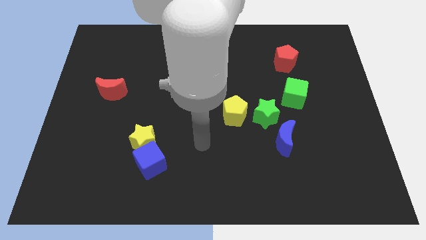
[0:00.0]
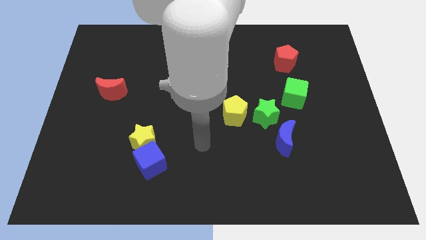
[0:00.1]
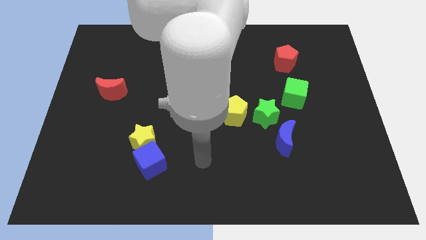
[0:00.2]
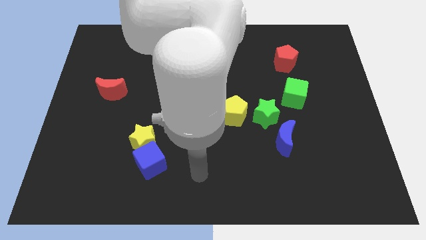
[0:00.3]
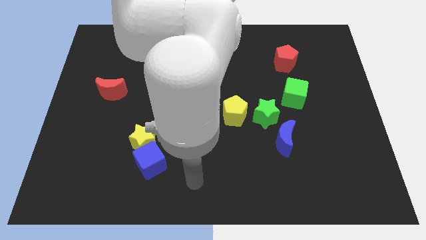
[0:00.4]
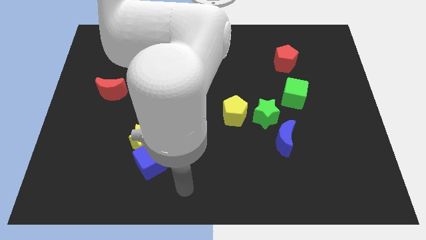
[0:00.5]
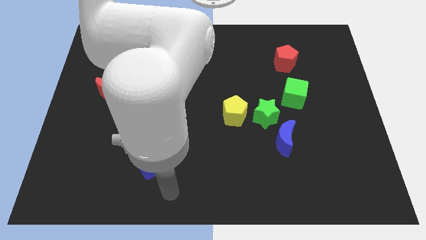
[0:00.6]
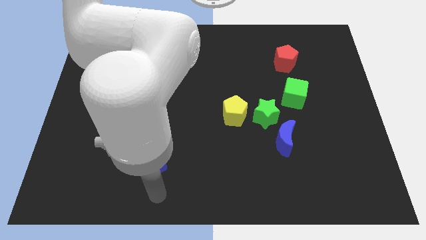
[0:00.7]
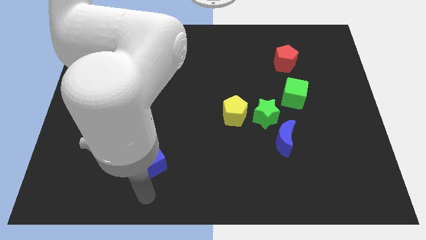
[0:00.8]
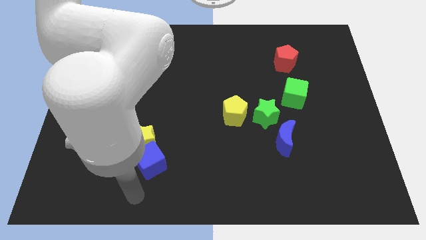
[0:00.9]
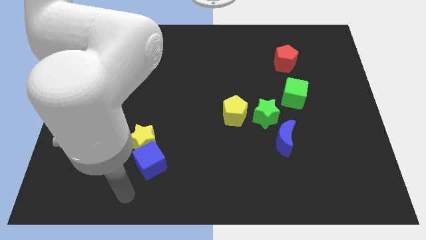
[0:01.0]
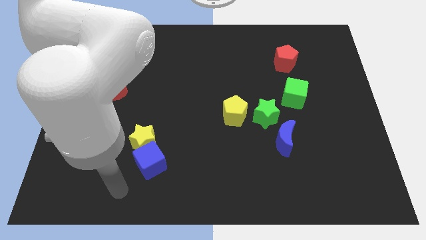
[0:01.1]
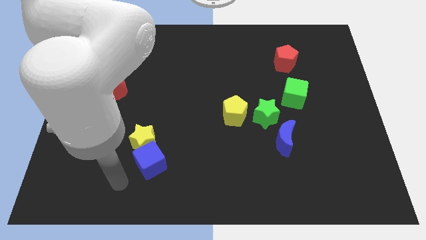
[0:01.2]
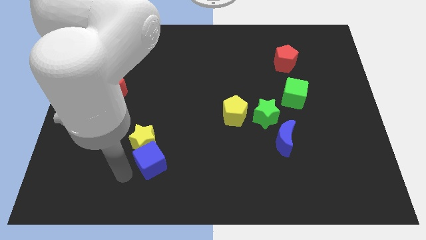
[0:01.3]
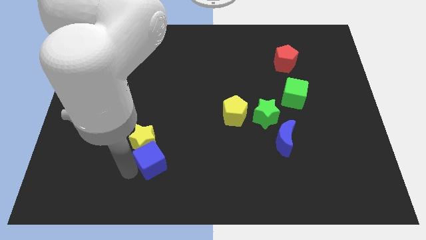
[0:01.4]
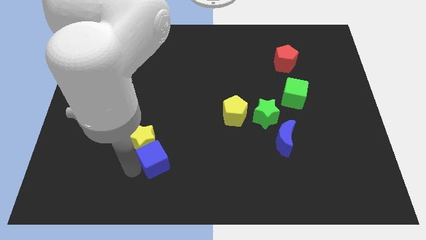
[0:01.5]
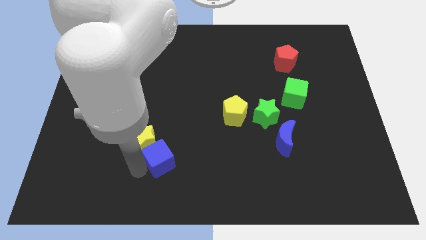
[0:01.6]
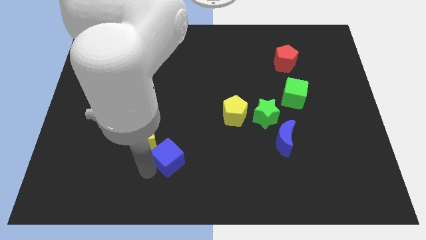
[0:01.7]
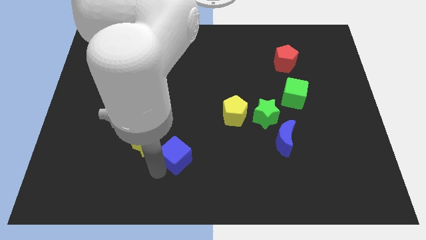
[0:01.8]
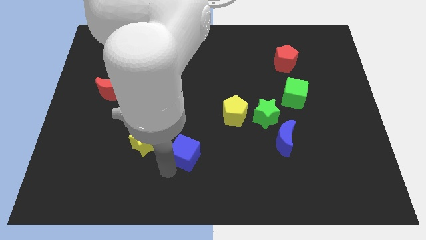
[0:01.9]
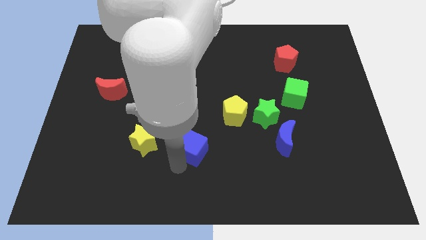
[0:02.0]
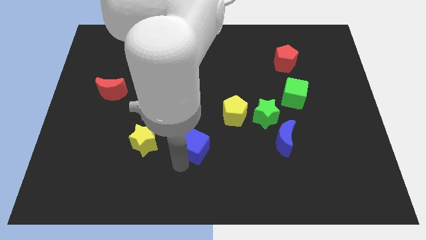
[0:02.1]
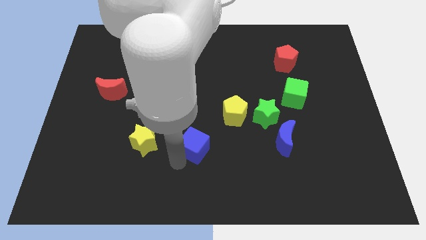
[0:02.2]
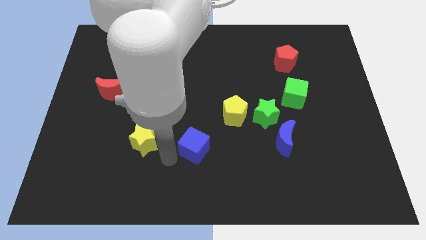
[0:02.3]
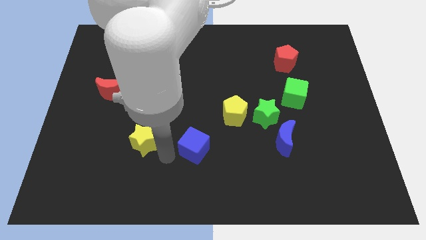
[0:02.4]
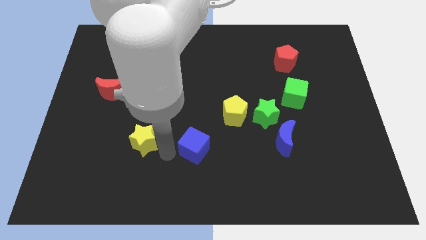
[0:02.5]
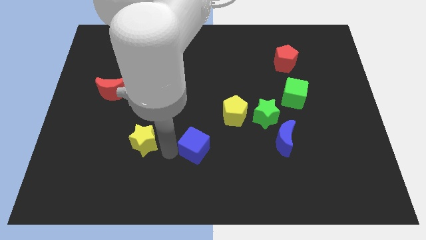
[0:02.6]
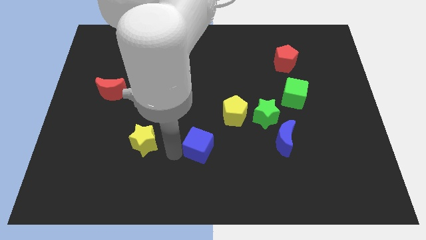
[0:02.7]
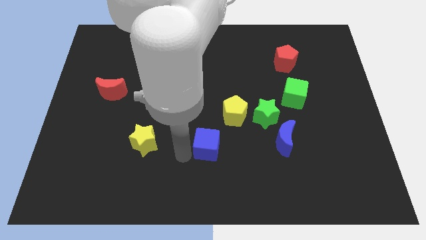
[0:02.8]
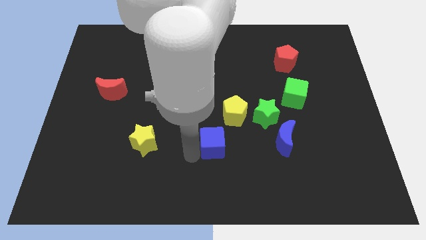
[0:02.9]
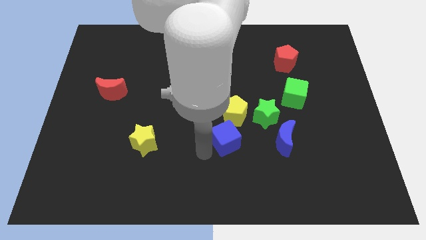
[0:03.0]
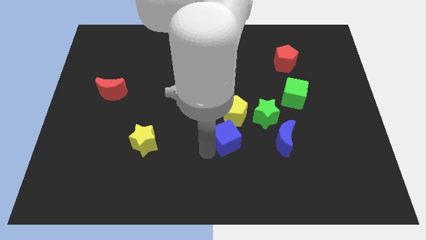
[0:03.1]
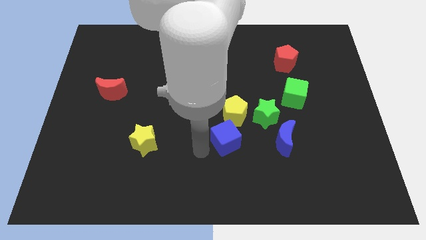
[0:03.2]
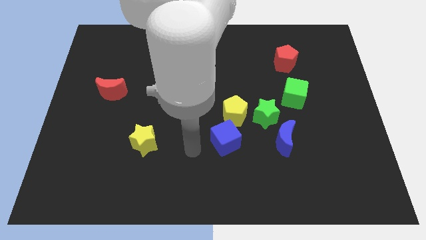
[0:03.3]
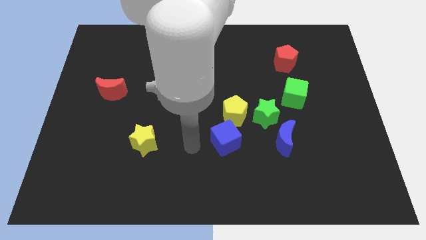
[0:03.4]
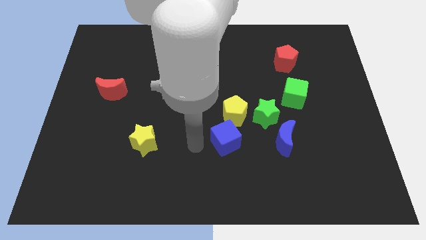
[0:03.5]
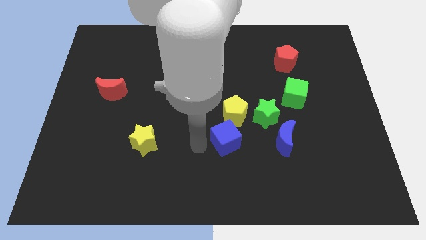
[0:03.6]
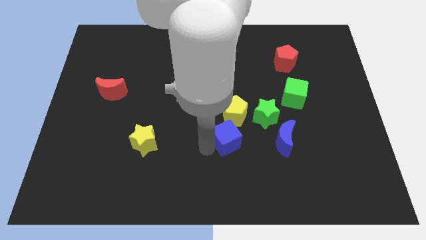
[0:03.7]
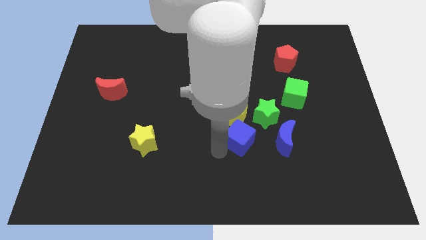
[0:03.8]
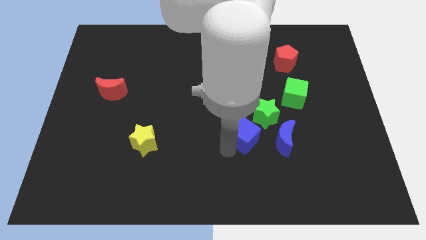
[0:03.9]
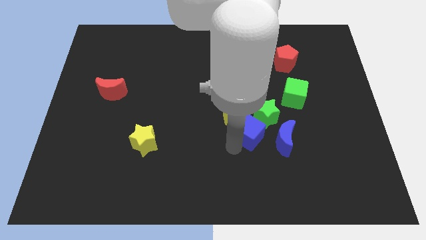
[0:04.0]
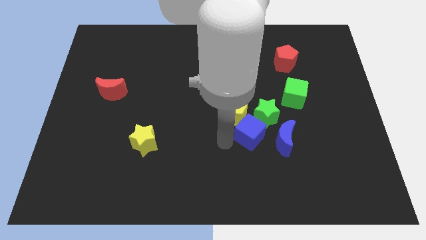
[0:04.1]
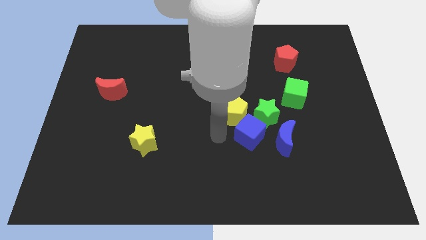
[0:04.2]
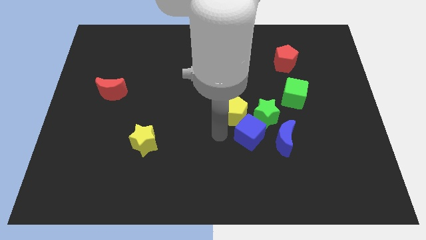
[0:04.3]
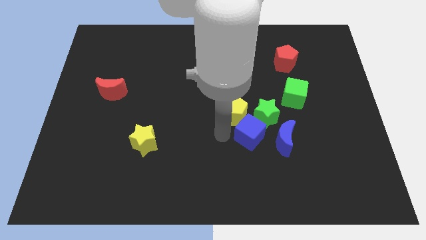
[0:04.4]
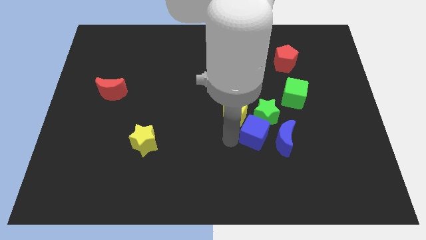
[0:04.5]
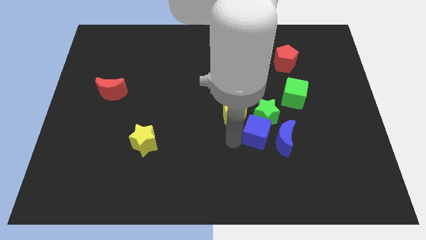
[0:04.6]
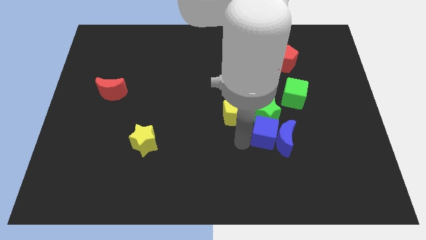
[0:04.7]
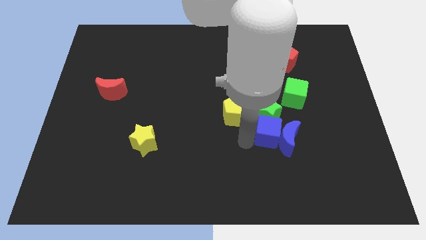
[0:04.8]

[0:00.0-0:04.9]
push the blue cube close to the blue moon

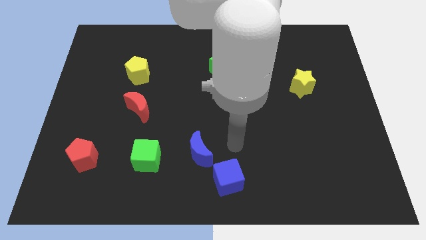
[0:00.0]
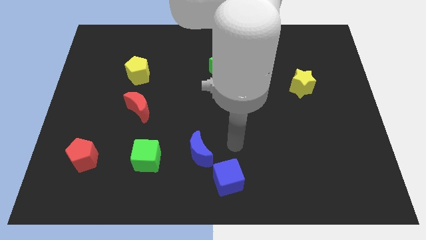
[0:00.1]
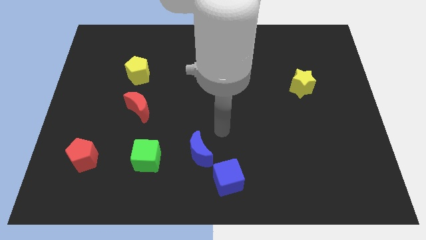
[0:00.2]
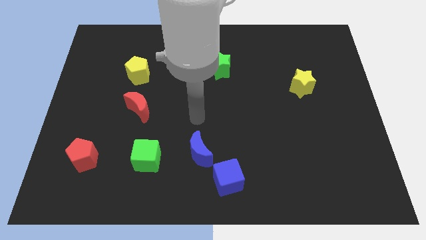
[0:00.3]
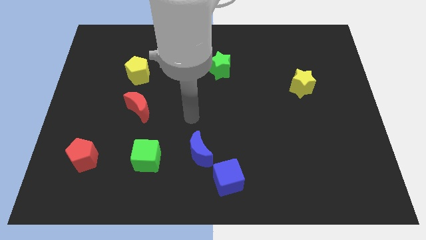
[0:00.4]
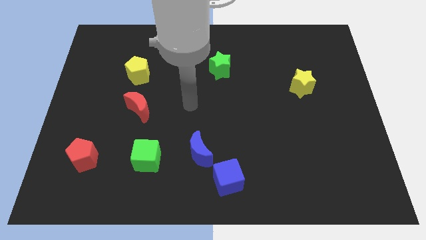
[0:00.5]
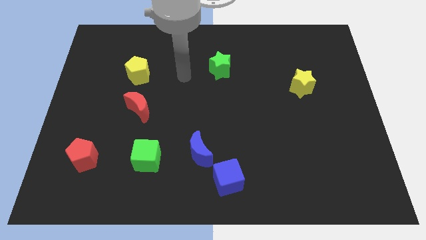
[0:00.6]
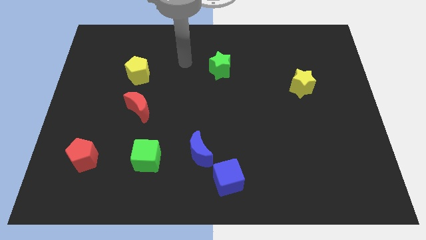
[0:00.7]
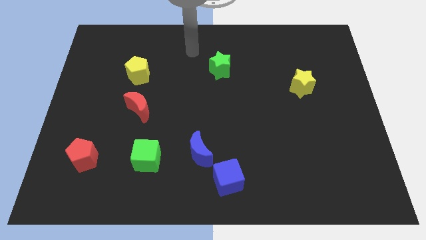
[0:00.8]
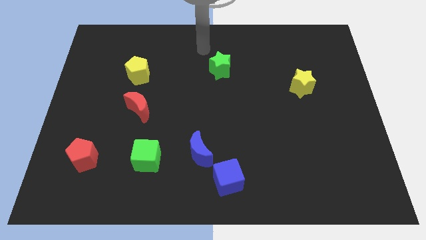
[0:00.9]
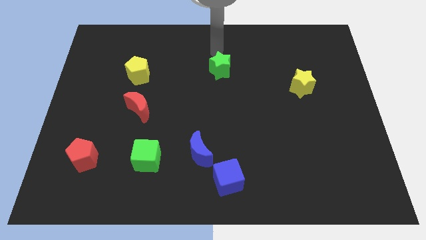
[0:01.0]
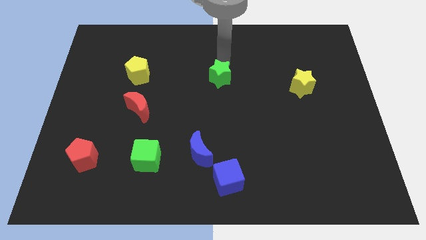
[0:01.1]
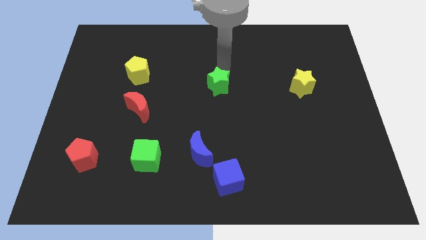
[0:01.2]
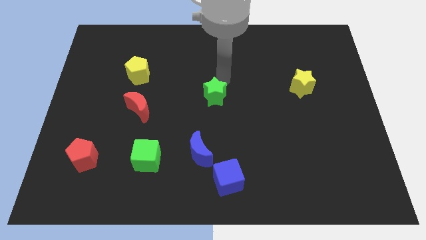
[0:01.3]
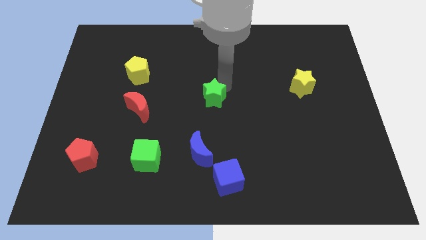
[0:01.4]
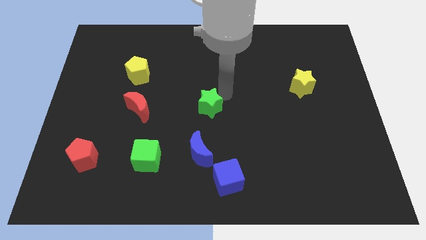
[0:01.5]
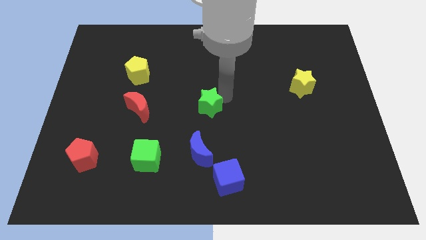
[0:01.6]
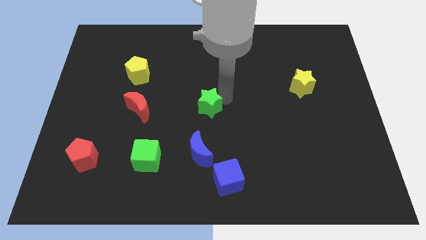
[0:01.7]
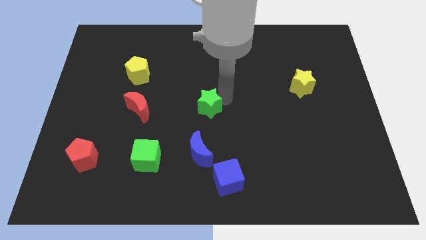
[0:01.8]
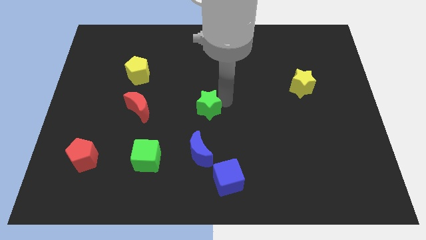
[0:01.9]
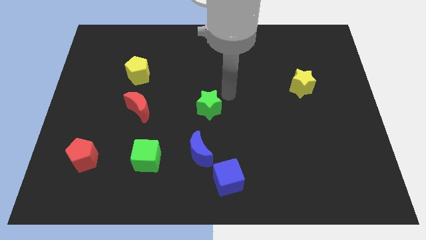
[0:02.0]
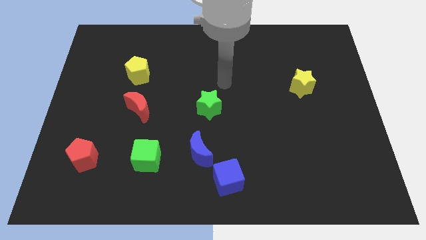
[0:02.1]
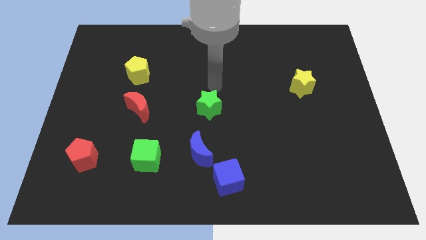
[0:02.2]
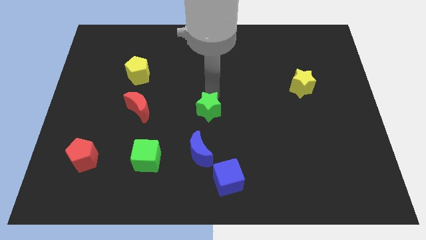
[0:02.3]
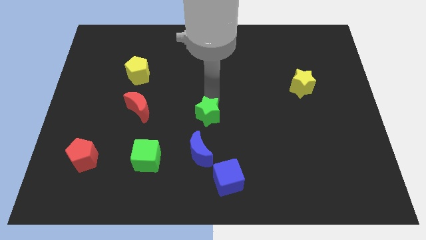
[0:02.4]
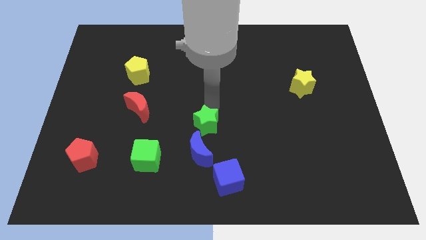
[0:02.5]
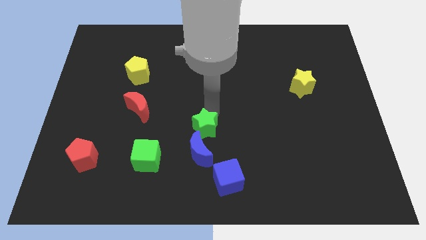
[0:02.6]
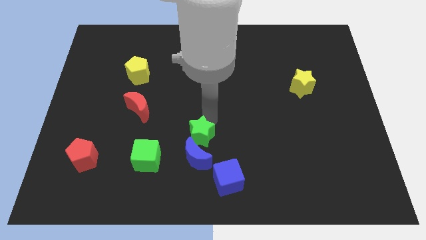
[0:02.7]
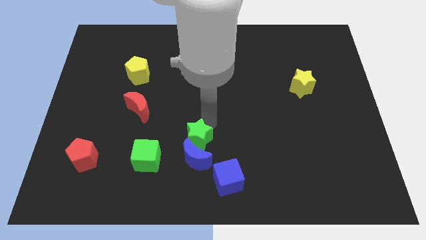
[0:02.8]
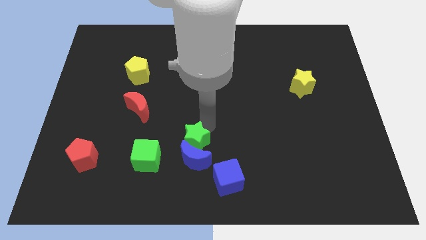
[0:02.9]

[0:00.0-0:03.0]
slide the green star close to the blue moon

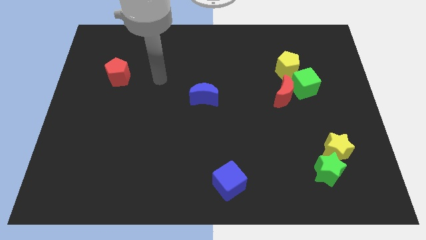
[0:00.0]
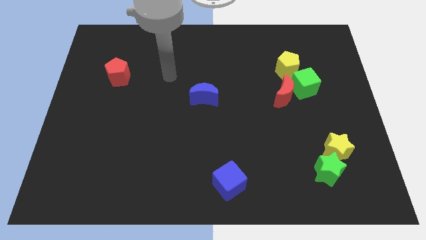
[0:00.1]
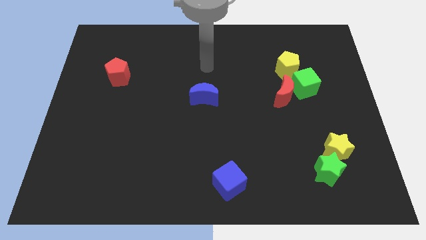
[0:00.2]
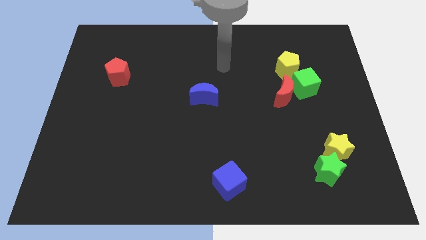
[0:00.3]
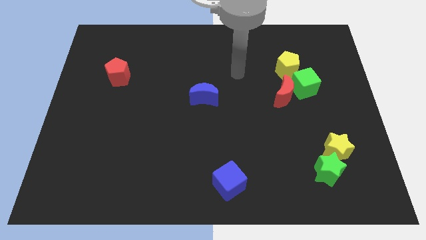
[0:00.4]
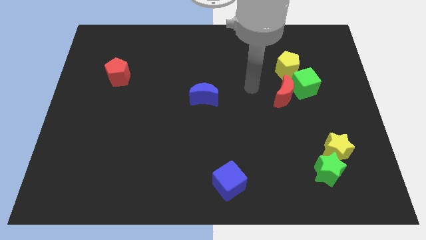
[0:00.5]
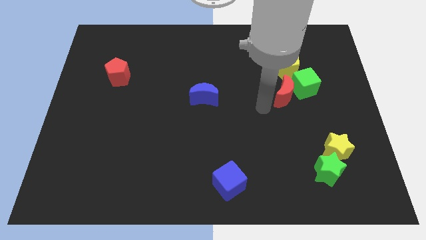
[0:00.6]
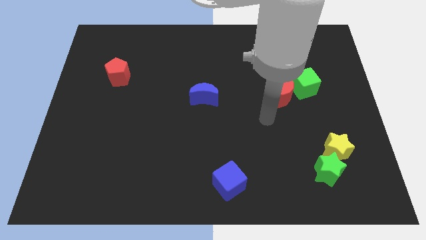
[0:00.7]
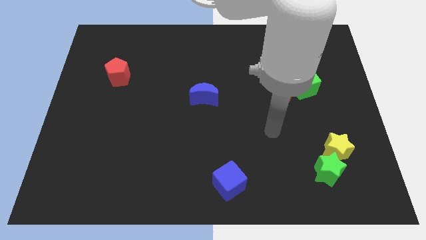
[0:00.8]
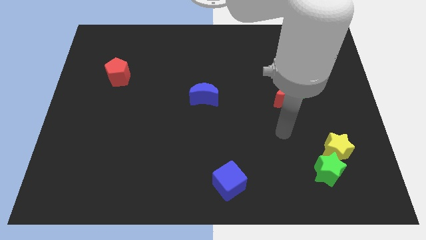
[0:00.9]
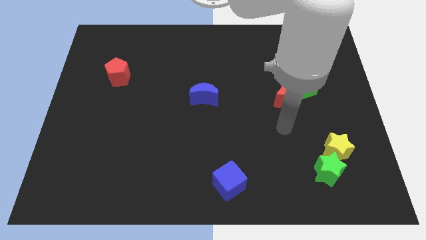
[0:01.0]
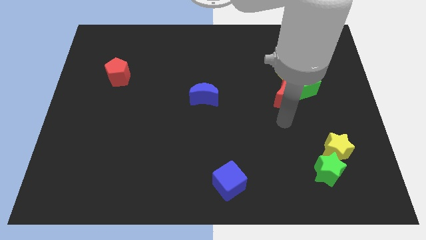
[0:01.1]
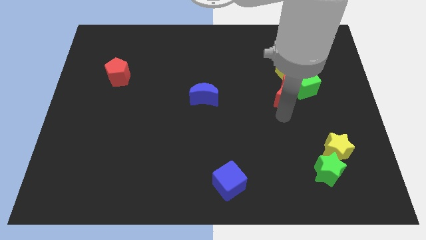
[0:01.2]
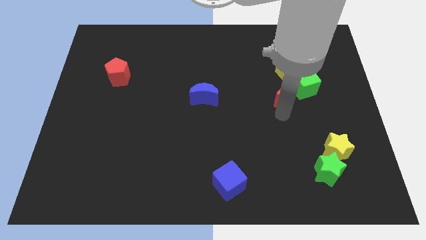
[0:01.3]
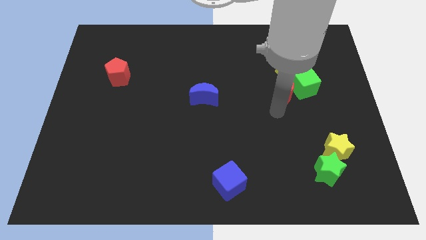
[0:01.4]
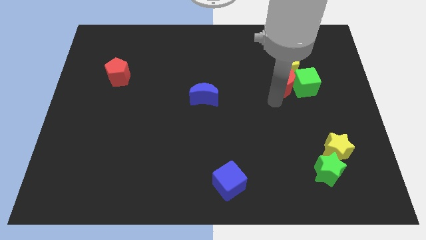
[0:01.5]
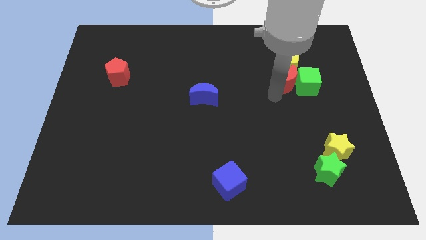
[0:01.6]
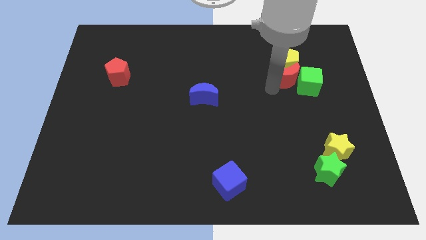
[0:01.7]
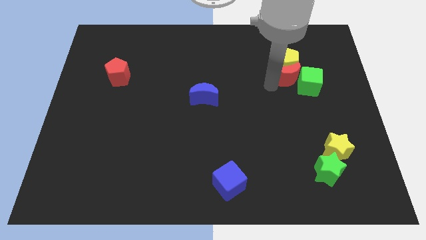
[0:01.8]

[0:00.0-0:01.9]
slide the red moon next to the yellow pentagon
